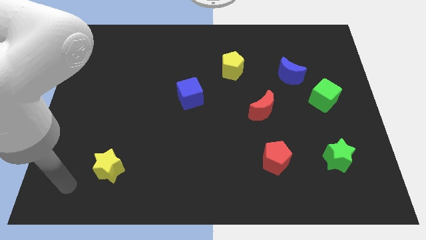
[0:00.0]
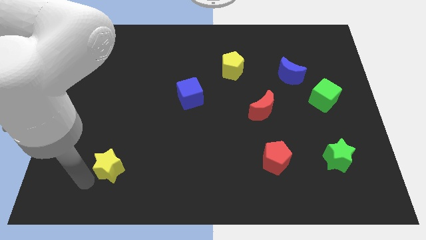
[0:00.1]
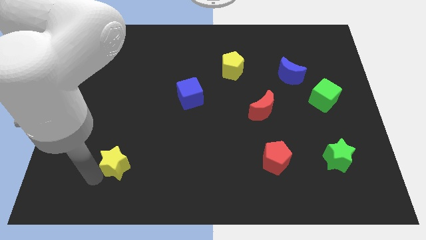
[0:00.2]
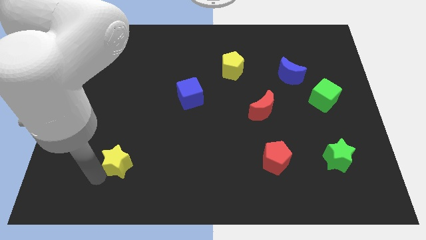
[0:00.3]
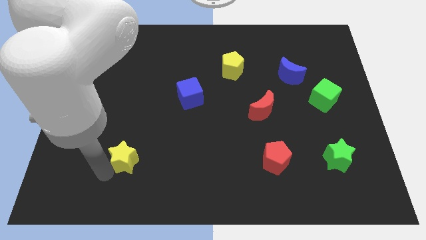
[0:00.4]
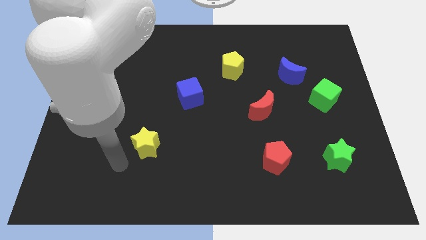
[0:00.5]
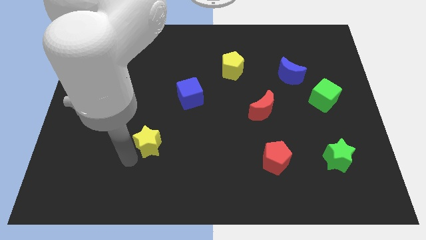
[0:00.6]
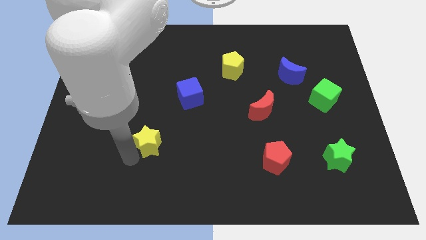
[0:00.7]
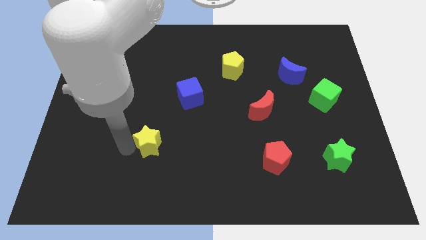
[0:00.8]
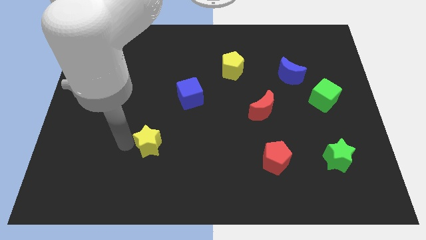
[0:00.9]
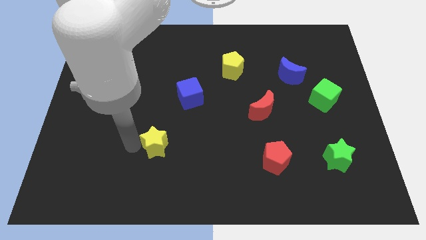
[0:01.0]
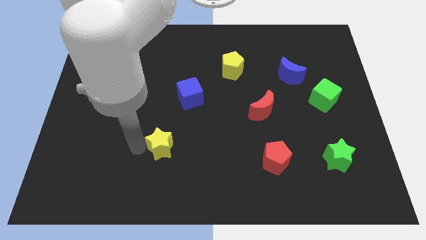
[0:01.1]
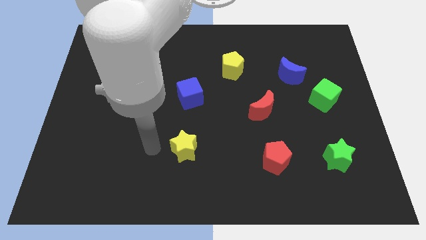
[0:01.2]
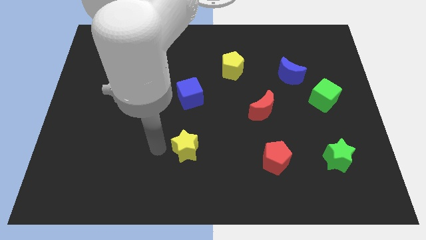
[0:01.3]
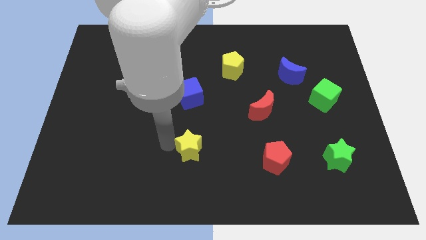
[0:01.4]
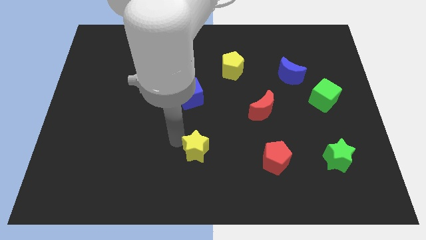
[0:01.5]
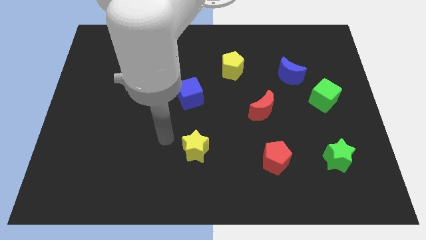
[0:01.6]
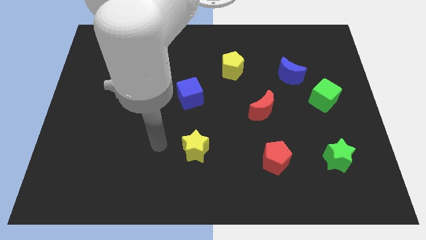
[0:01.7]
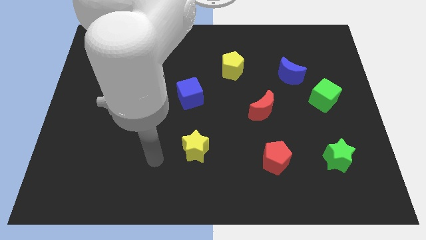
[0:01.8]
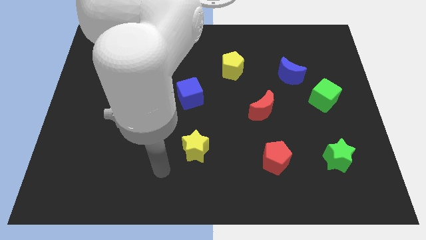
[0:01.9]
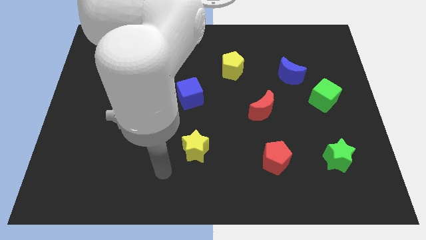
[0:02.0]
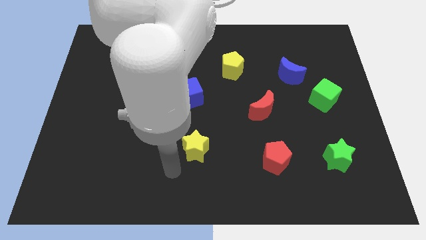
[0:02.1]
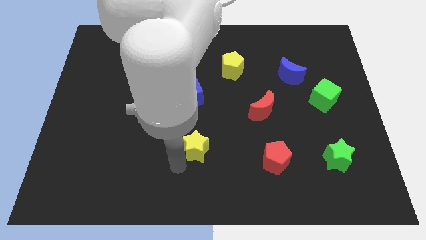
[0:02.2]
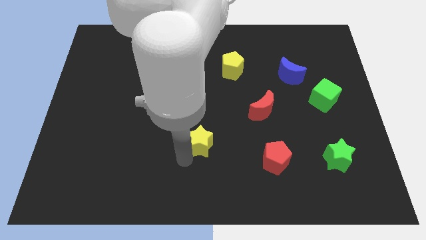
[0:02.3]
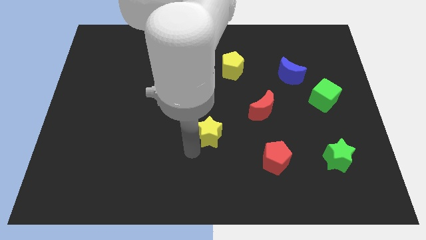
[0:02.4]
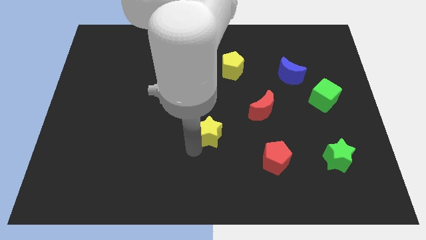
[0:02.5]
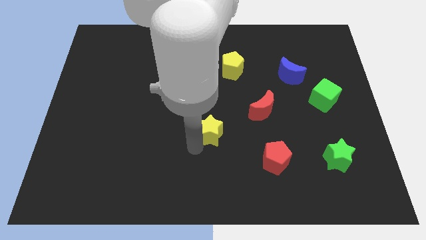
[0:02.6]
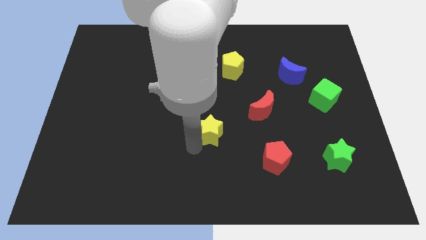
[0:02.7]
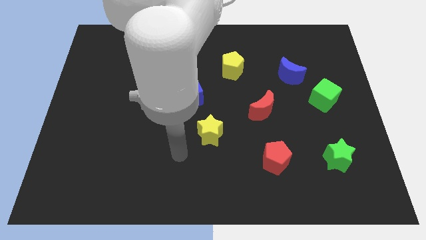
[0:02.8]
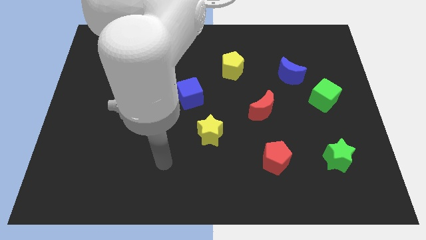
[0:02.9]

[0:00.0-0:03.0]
place the yellow star at the bottom left side of the red crescent

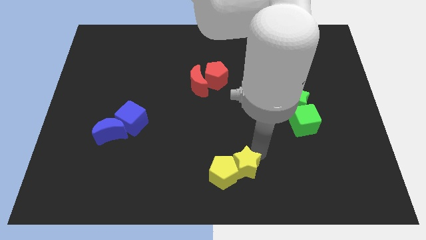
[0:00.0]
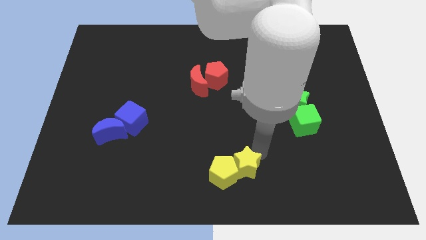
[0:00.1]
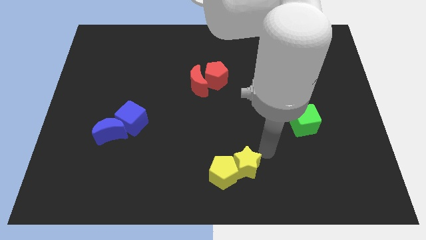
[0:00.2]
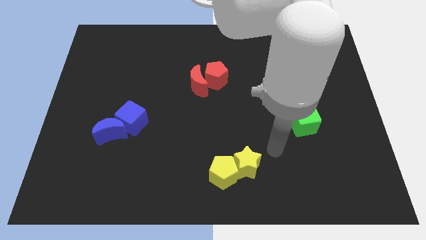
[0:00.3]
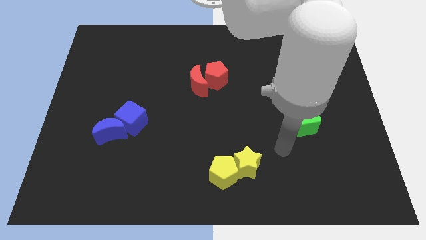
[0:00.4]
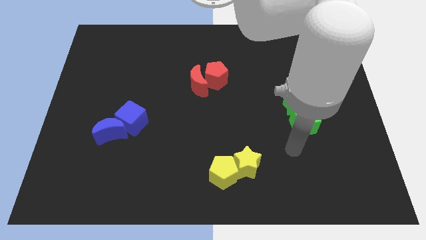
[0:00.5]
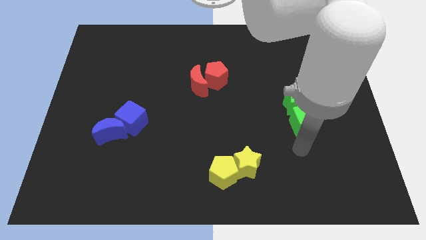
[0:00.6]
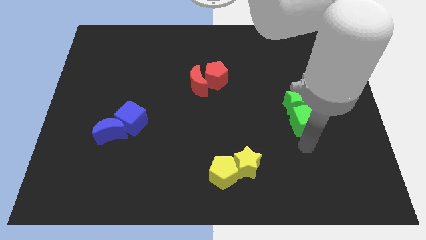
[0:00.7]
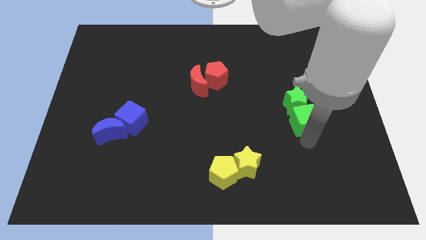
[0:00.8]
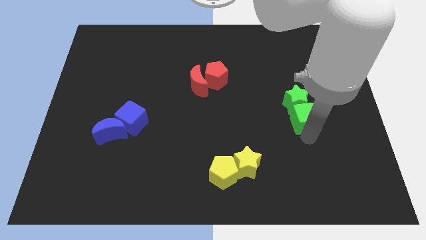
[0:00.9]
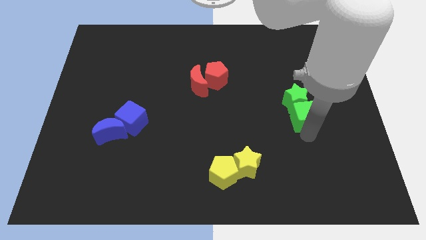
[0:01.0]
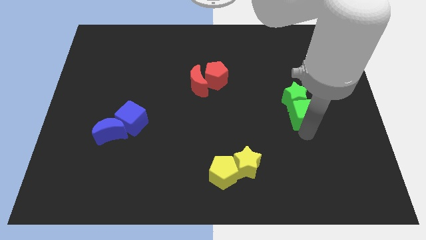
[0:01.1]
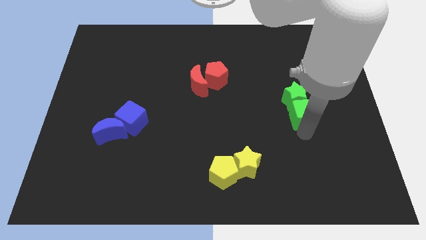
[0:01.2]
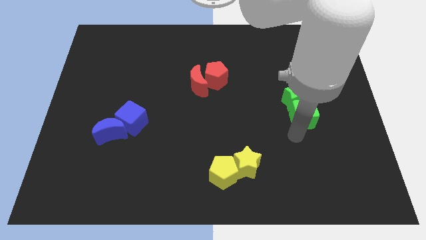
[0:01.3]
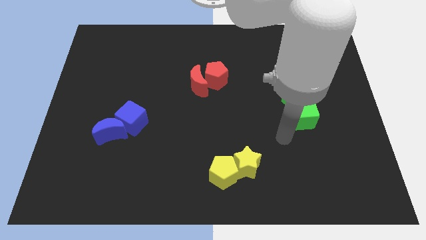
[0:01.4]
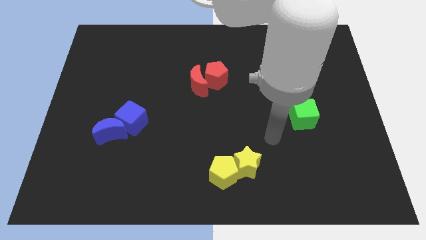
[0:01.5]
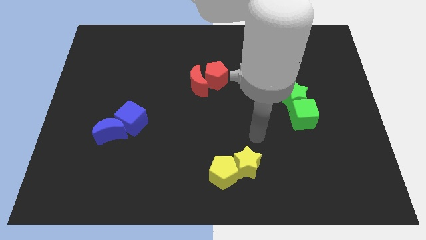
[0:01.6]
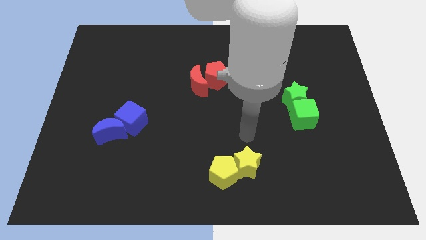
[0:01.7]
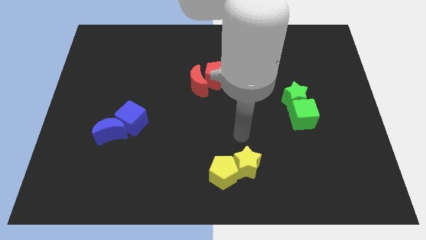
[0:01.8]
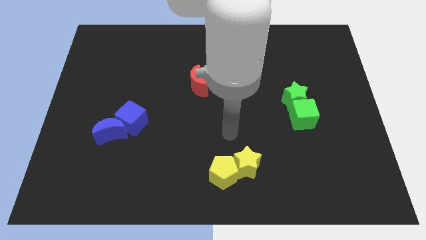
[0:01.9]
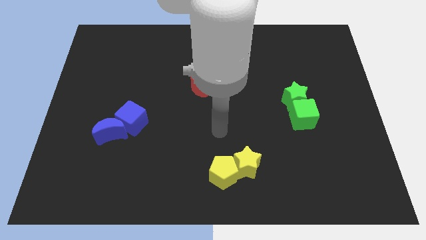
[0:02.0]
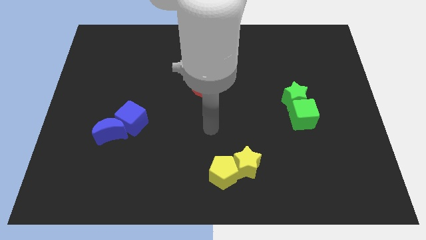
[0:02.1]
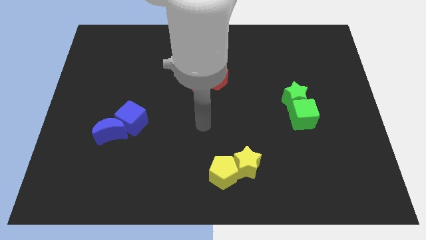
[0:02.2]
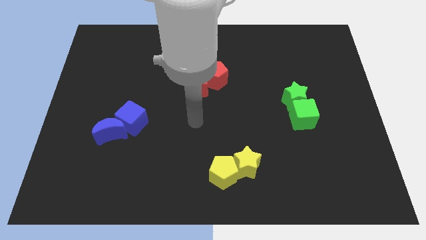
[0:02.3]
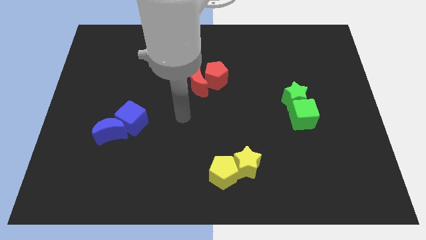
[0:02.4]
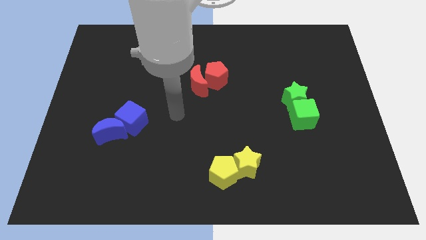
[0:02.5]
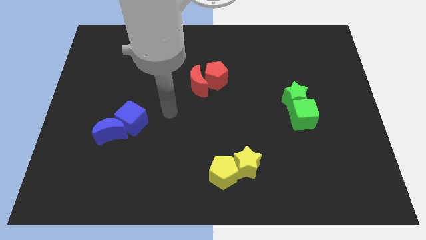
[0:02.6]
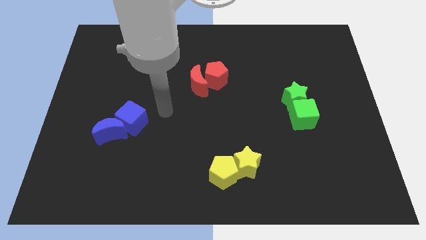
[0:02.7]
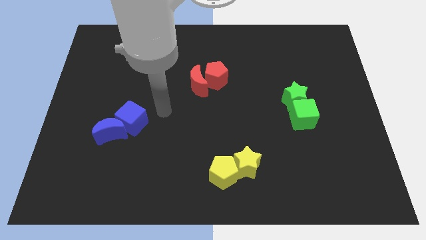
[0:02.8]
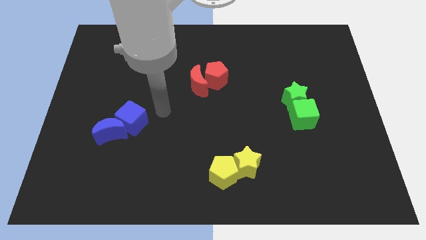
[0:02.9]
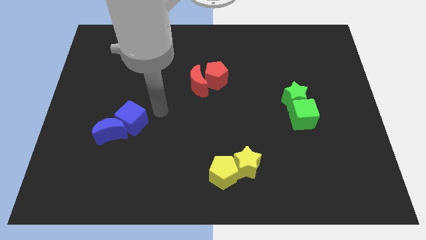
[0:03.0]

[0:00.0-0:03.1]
move the group of green blocks slightly upwards

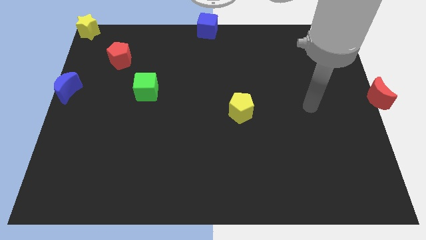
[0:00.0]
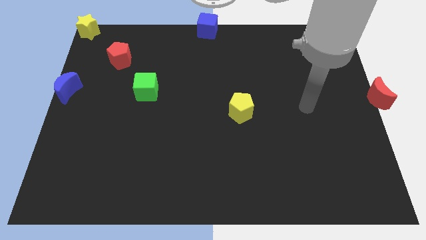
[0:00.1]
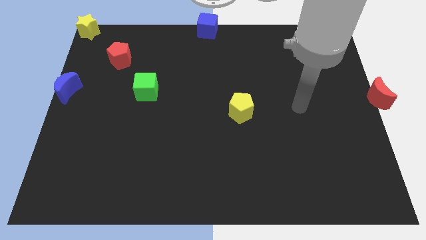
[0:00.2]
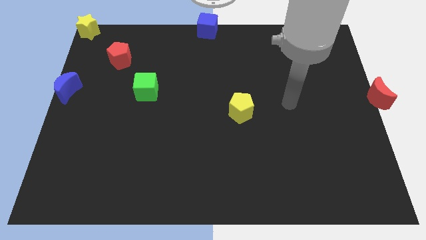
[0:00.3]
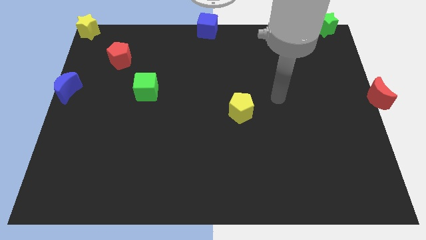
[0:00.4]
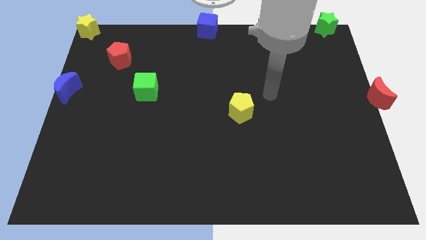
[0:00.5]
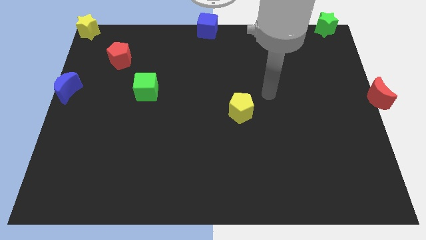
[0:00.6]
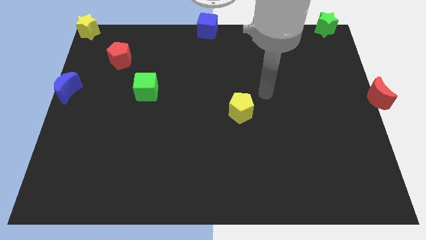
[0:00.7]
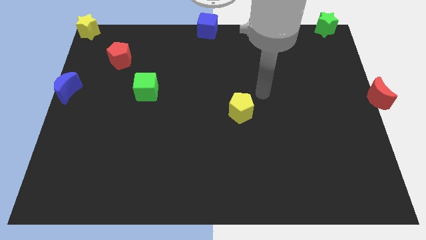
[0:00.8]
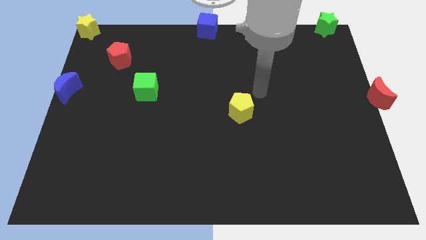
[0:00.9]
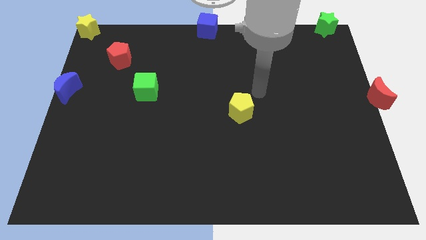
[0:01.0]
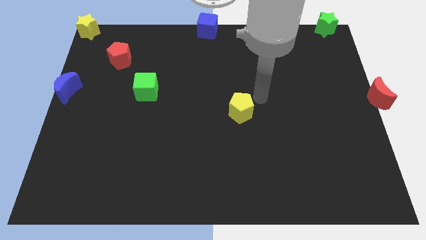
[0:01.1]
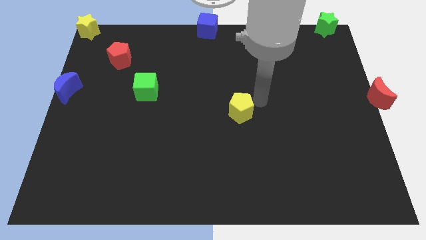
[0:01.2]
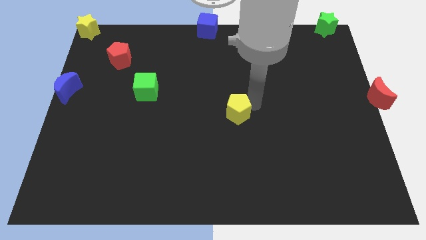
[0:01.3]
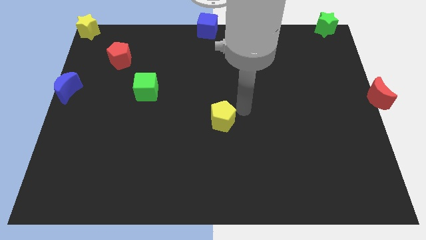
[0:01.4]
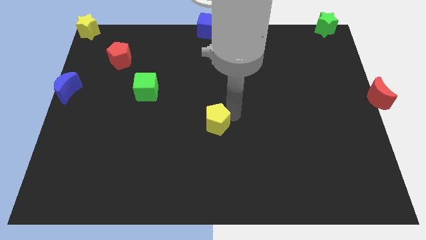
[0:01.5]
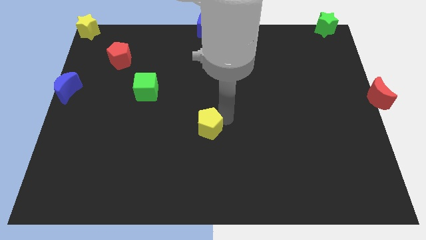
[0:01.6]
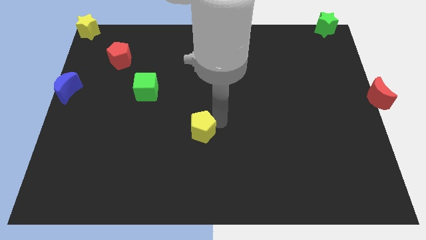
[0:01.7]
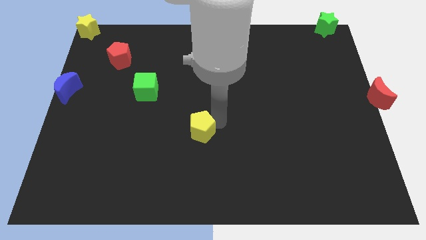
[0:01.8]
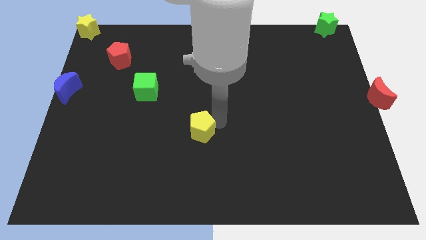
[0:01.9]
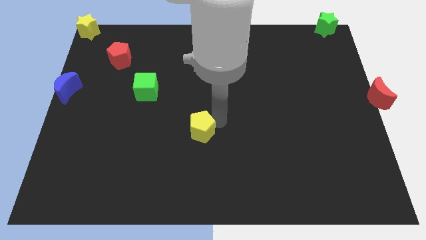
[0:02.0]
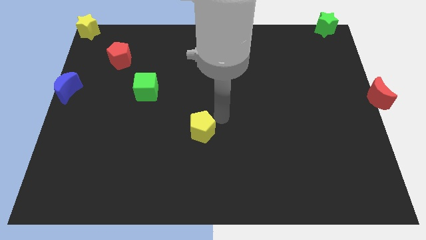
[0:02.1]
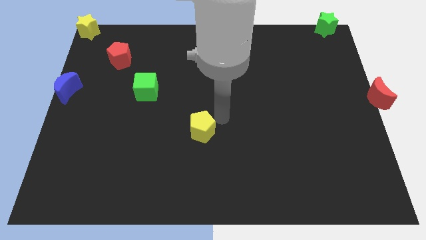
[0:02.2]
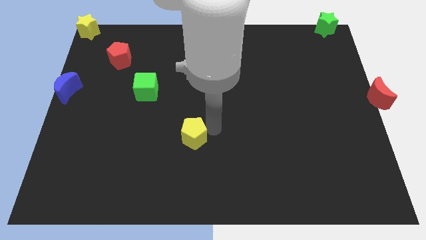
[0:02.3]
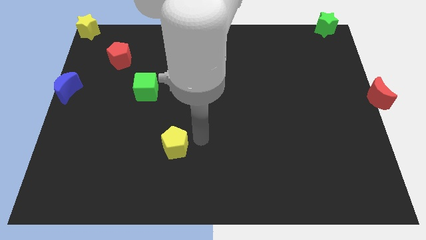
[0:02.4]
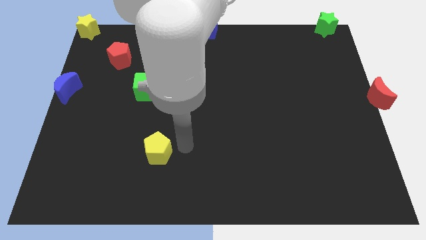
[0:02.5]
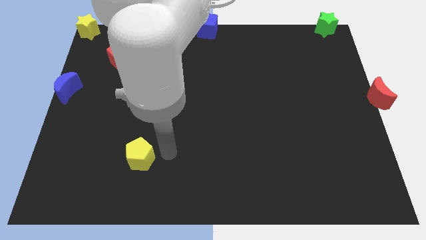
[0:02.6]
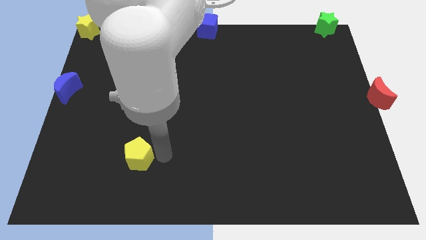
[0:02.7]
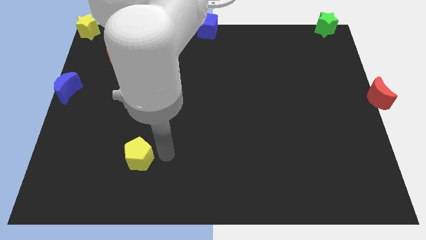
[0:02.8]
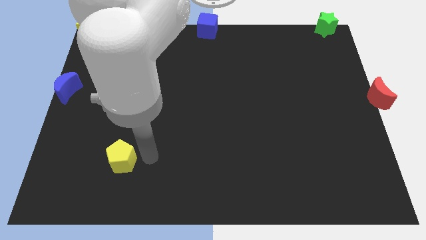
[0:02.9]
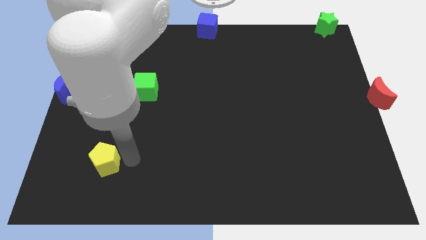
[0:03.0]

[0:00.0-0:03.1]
drag yellow pentagon diagonally towards bottom left of the board
